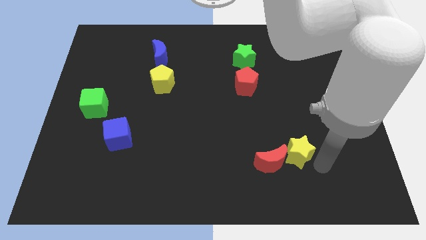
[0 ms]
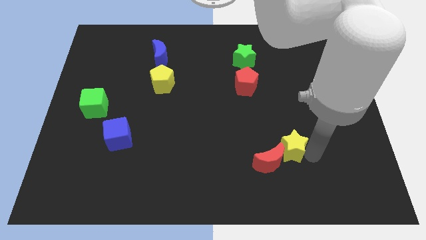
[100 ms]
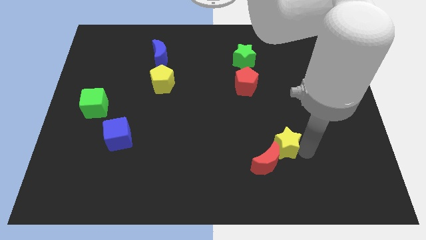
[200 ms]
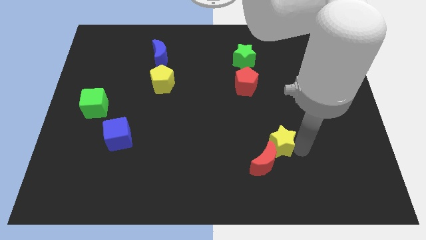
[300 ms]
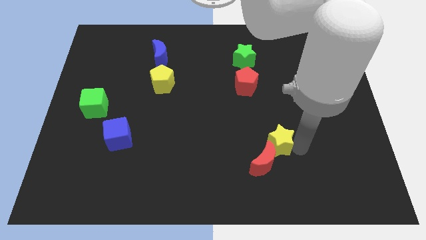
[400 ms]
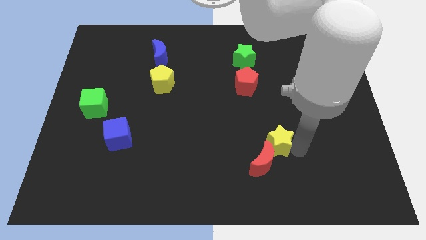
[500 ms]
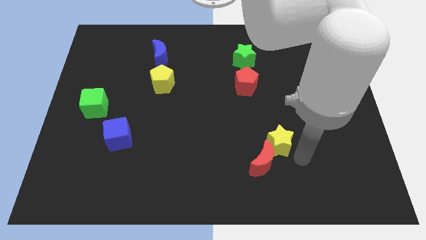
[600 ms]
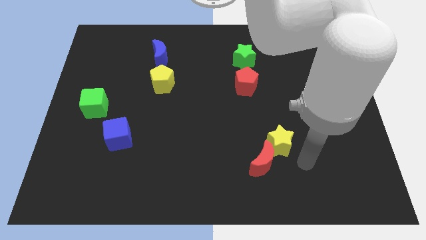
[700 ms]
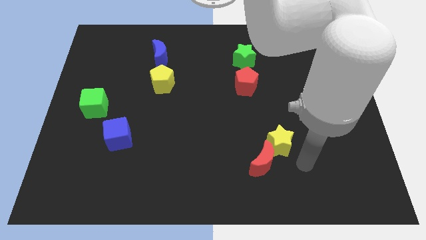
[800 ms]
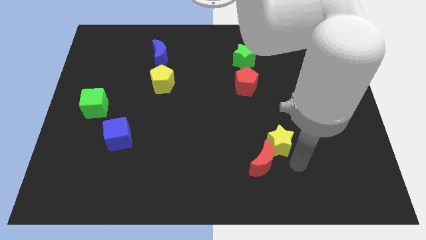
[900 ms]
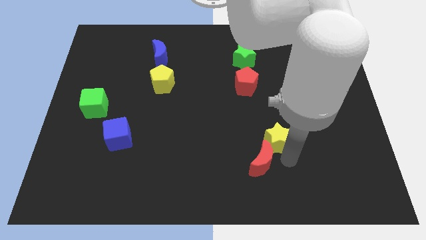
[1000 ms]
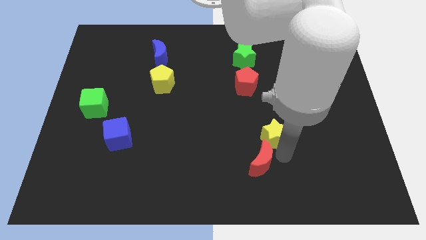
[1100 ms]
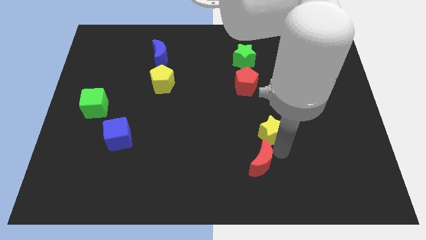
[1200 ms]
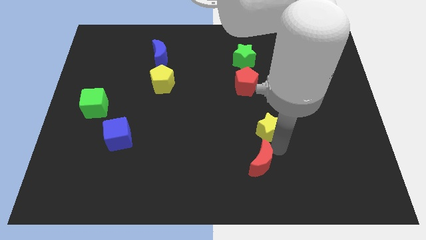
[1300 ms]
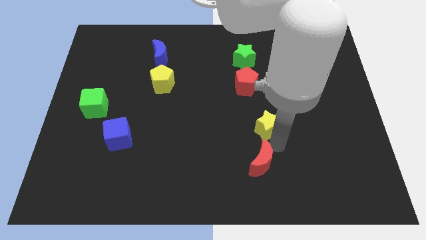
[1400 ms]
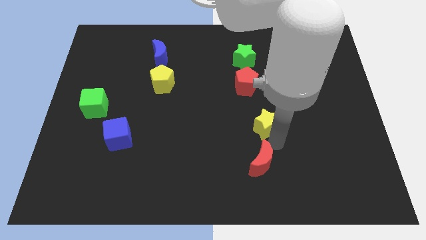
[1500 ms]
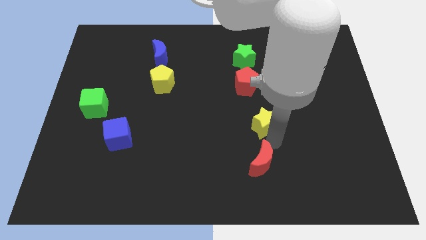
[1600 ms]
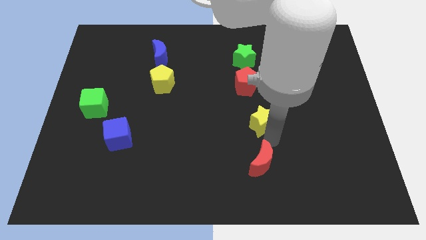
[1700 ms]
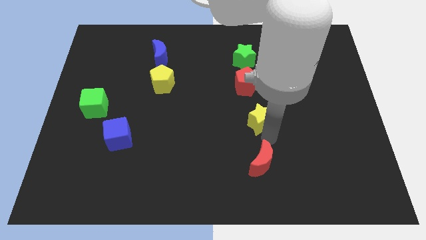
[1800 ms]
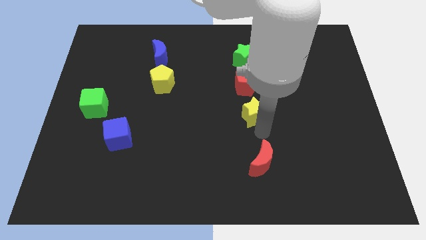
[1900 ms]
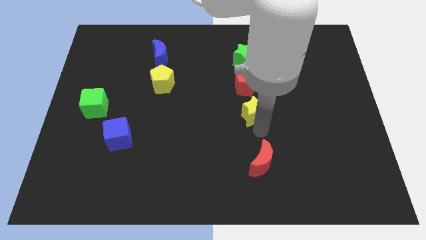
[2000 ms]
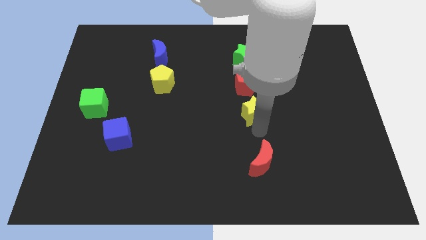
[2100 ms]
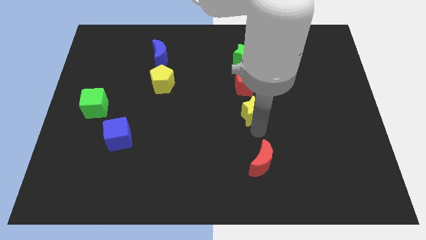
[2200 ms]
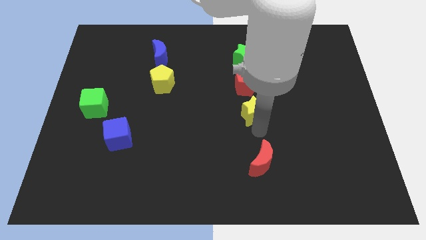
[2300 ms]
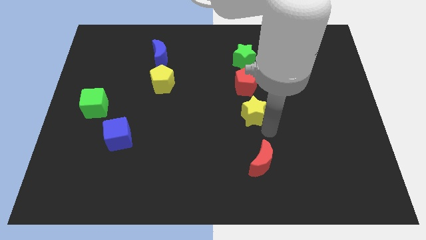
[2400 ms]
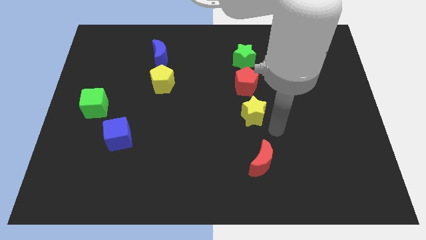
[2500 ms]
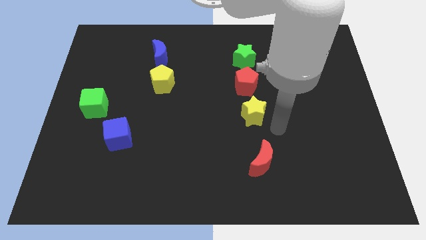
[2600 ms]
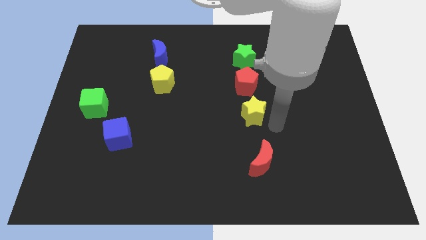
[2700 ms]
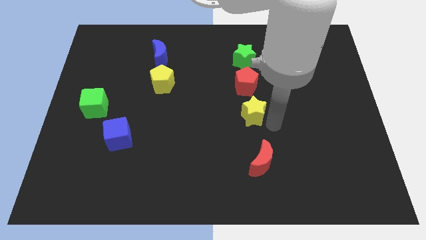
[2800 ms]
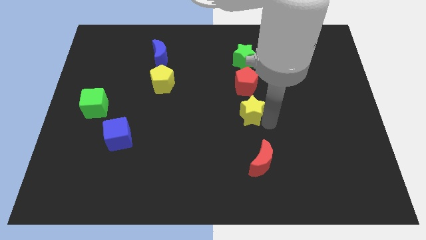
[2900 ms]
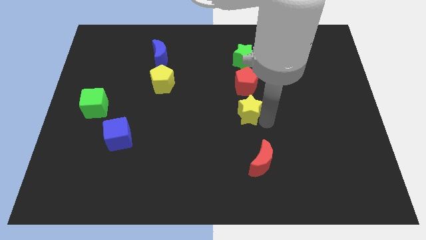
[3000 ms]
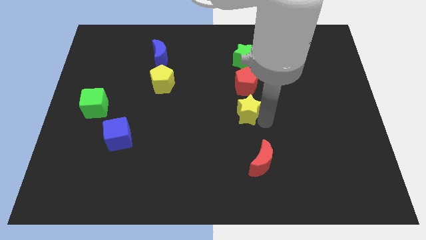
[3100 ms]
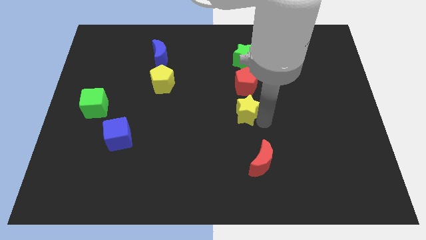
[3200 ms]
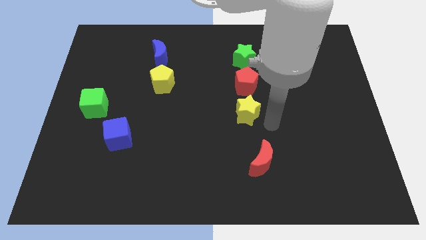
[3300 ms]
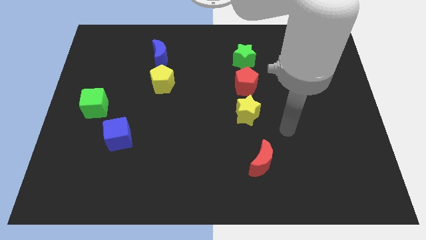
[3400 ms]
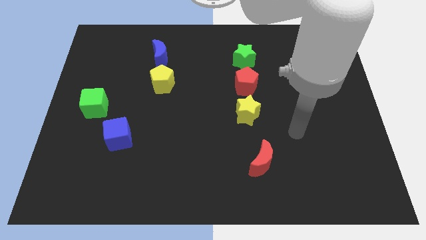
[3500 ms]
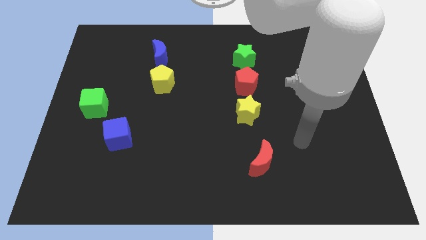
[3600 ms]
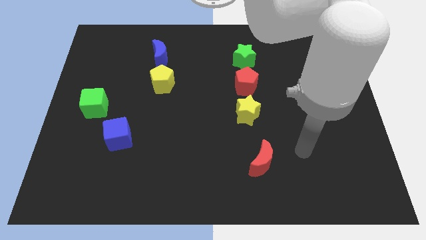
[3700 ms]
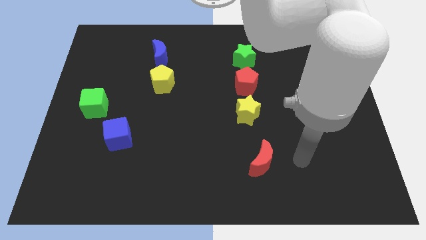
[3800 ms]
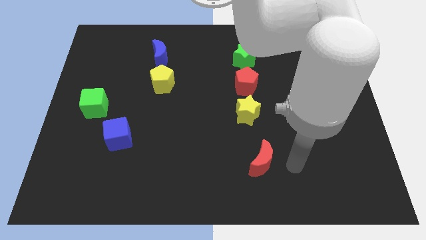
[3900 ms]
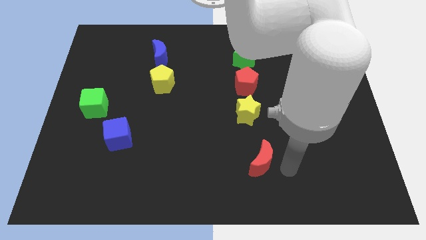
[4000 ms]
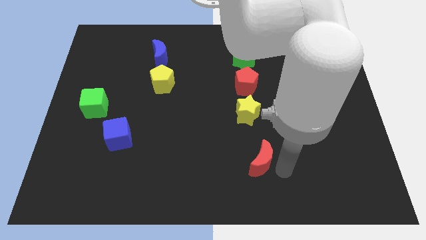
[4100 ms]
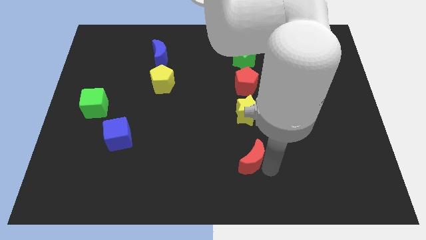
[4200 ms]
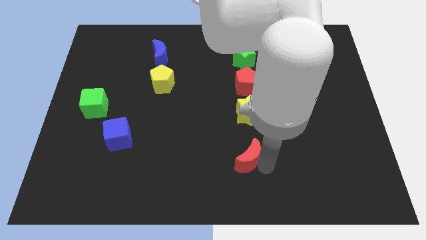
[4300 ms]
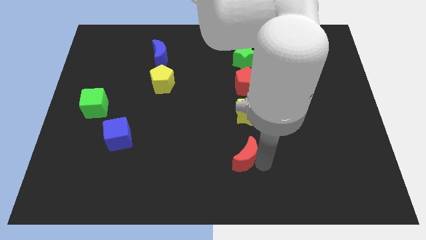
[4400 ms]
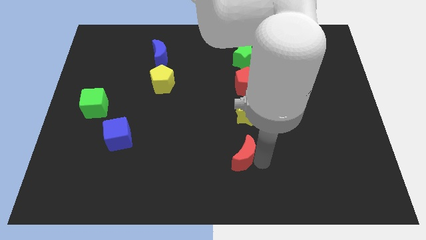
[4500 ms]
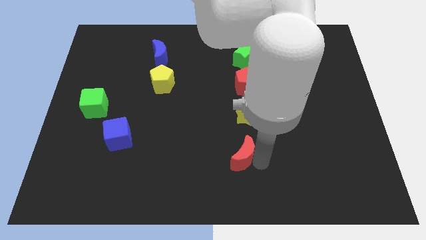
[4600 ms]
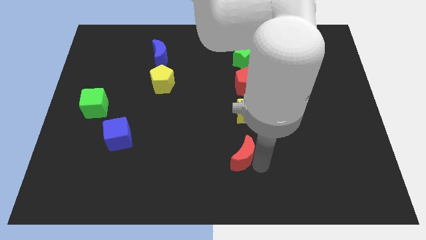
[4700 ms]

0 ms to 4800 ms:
separate red moon from yellow star

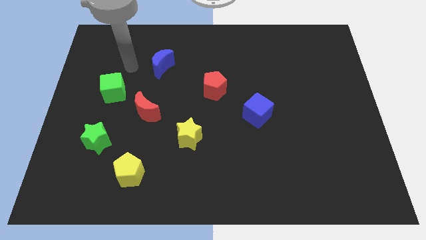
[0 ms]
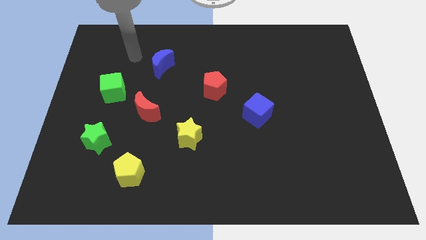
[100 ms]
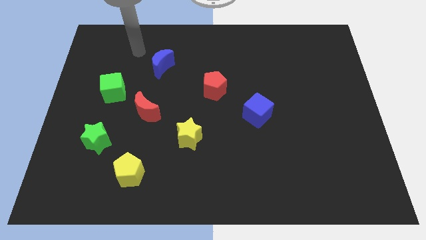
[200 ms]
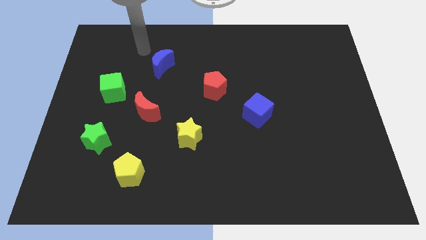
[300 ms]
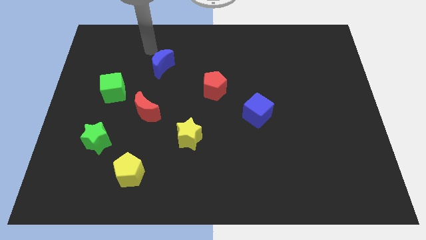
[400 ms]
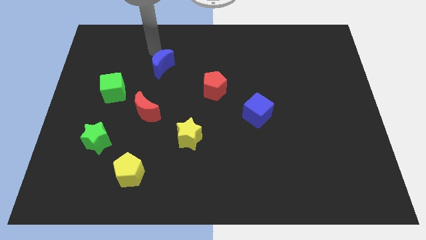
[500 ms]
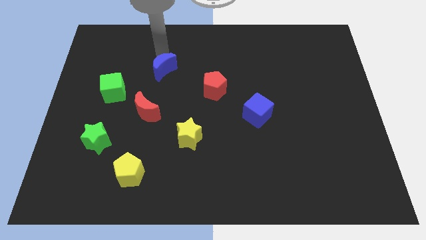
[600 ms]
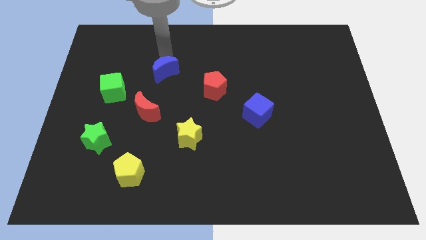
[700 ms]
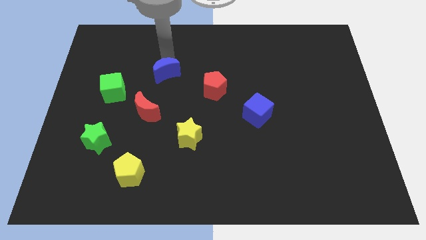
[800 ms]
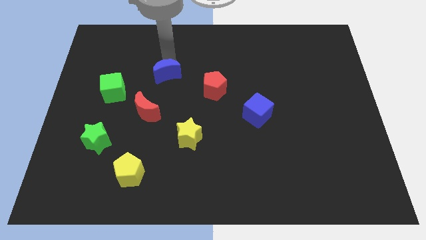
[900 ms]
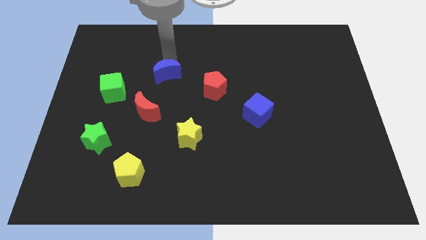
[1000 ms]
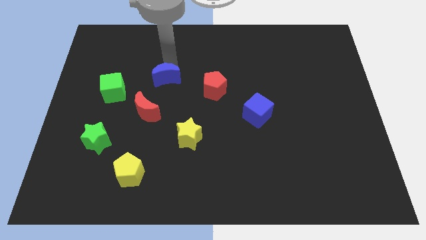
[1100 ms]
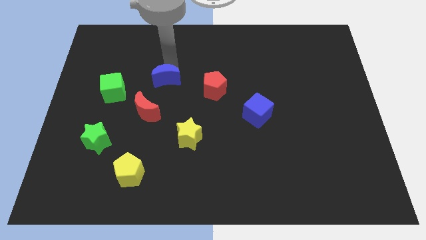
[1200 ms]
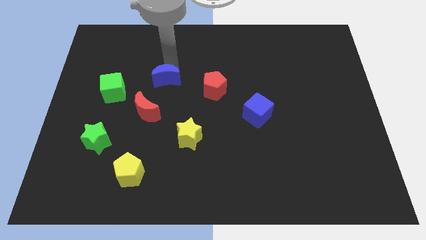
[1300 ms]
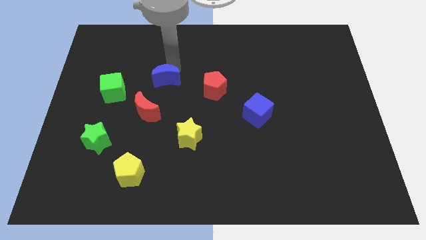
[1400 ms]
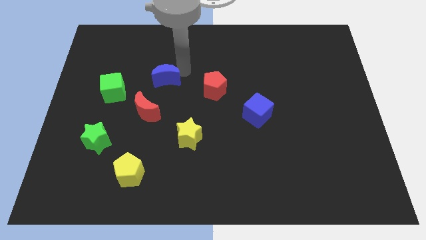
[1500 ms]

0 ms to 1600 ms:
move the blue moon slightly towards the bottom

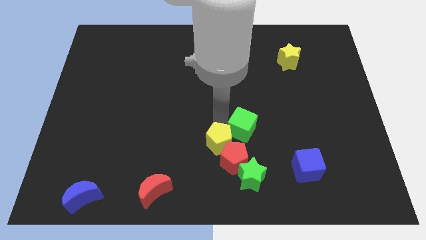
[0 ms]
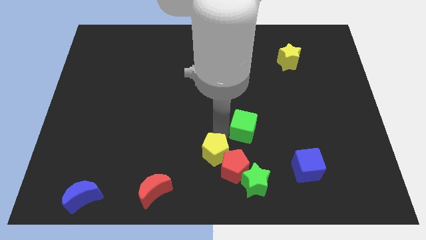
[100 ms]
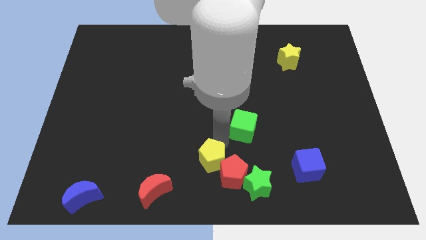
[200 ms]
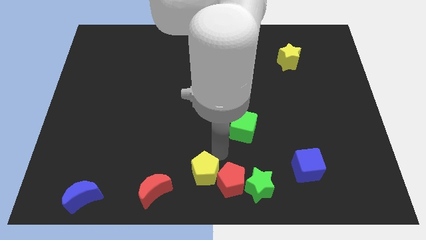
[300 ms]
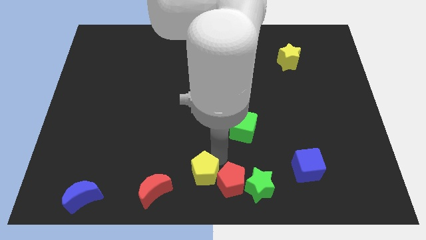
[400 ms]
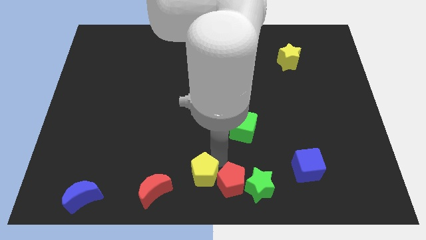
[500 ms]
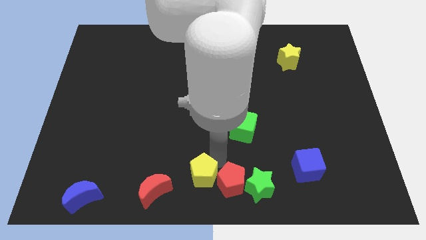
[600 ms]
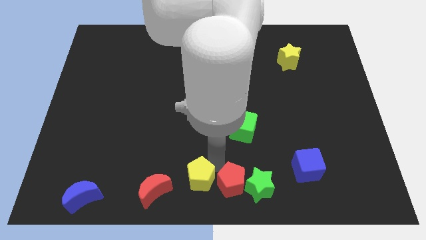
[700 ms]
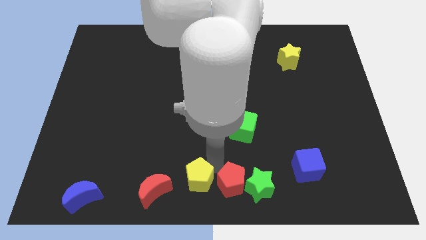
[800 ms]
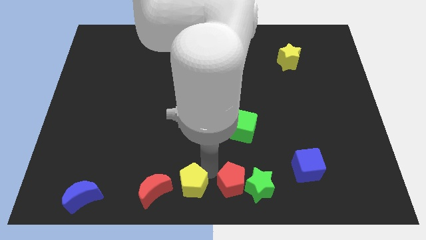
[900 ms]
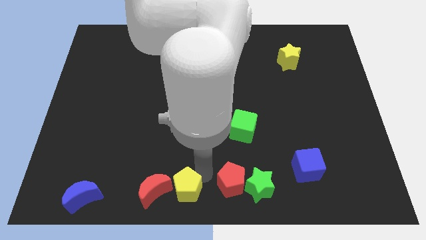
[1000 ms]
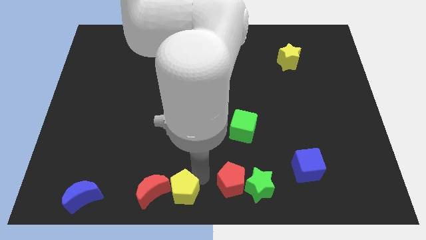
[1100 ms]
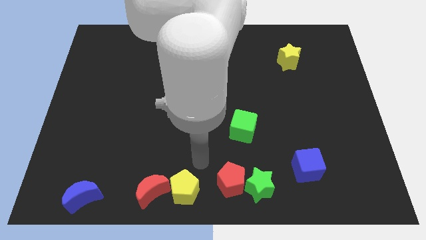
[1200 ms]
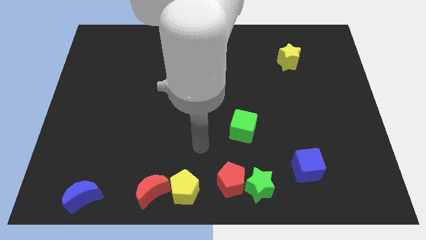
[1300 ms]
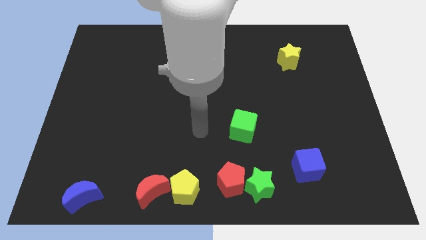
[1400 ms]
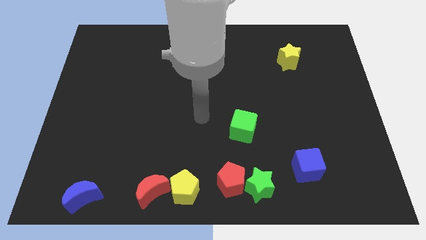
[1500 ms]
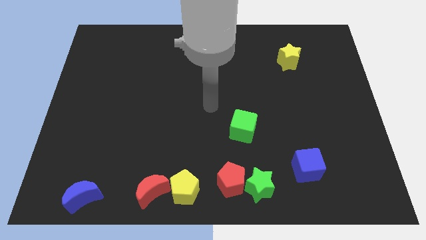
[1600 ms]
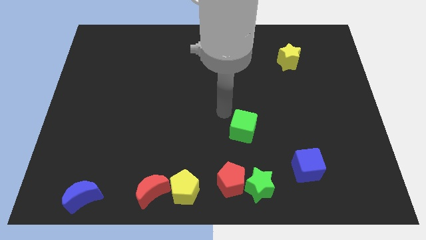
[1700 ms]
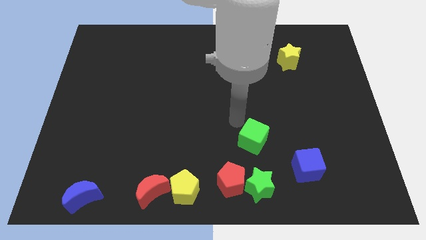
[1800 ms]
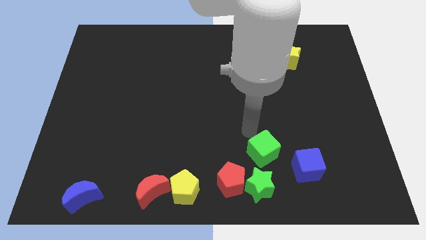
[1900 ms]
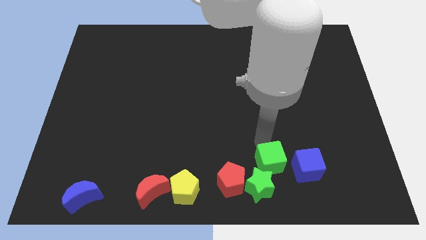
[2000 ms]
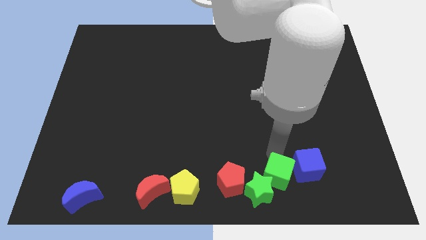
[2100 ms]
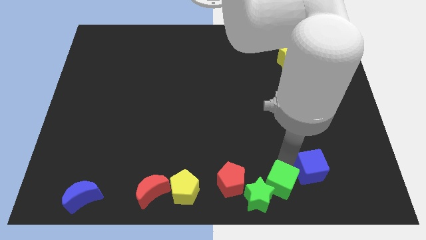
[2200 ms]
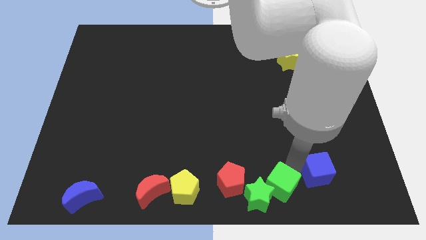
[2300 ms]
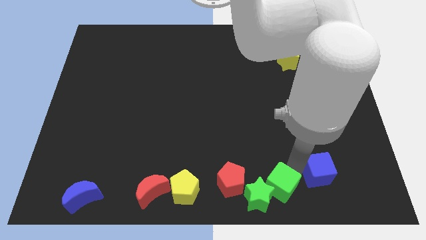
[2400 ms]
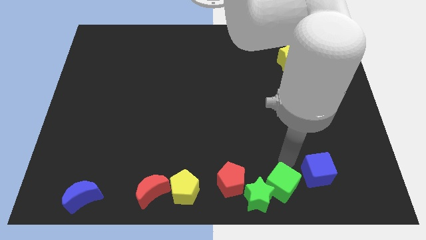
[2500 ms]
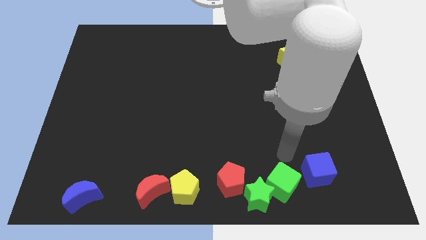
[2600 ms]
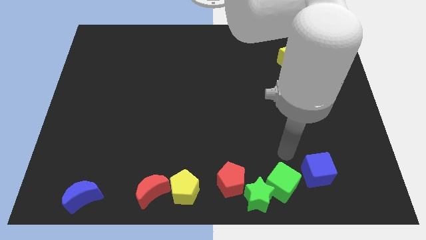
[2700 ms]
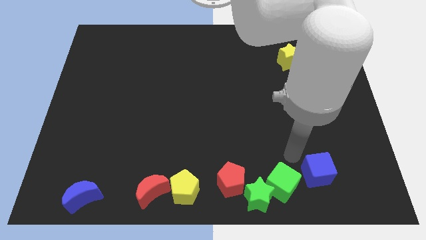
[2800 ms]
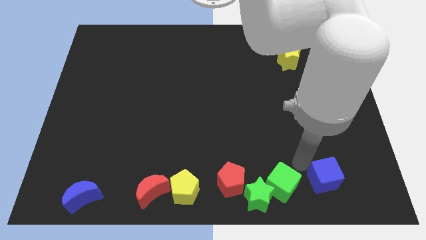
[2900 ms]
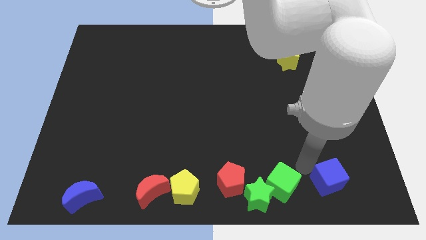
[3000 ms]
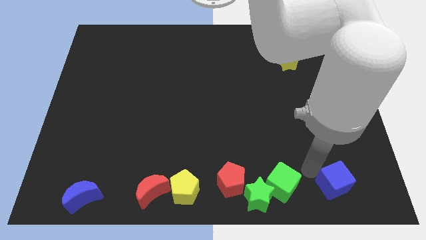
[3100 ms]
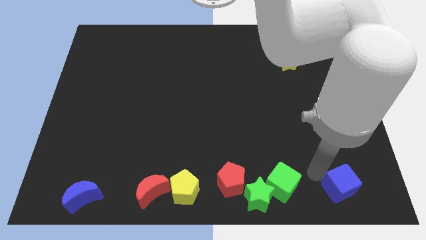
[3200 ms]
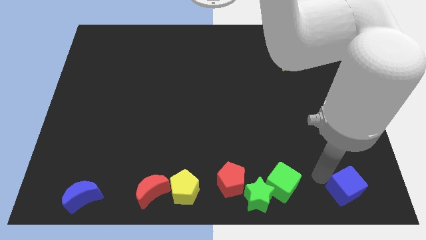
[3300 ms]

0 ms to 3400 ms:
push the yellow pentagon and place it next to the red moon
